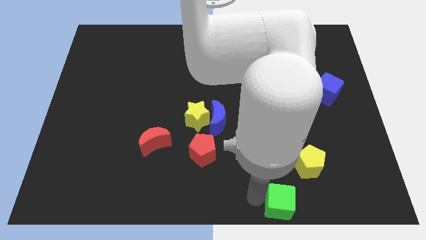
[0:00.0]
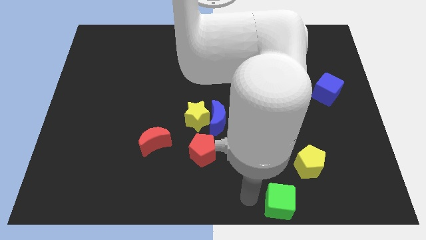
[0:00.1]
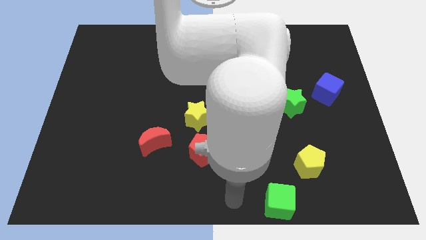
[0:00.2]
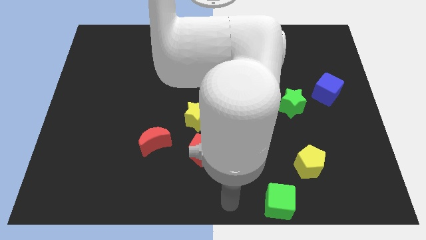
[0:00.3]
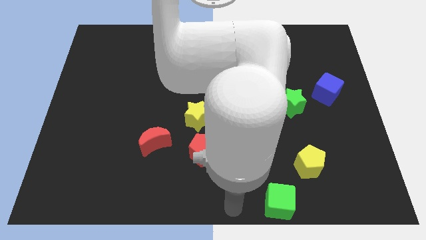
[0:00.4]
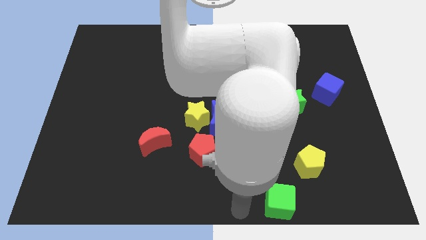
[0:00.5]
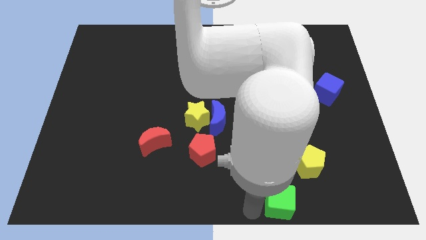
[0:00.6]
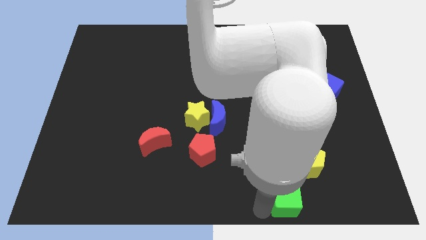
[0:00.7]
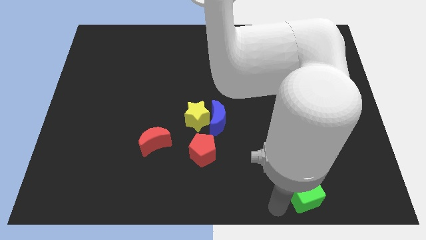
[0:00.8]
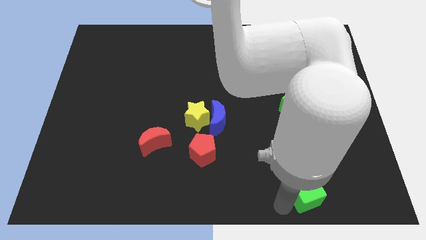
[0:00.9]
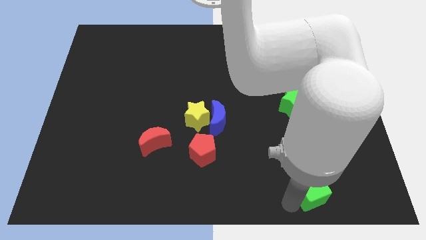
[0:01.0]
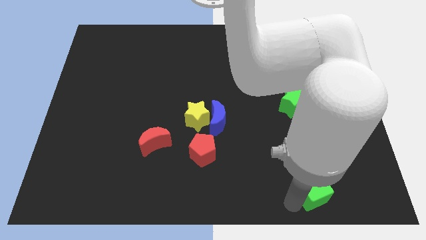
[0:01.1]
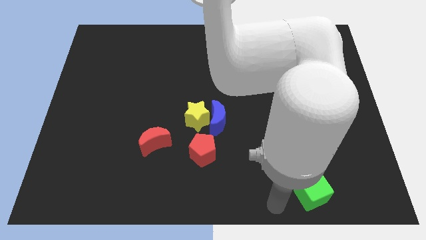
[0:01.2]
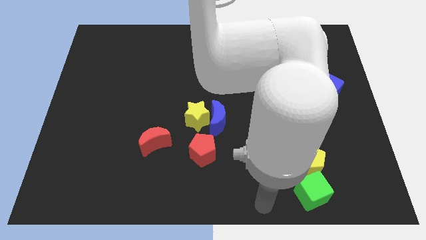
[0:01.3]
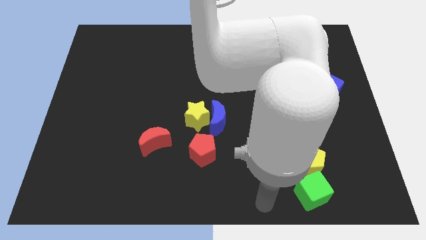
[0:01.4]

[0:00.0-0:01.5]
place the green cube below the yellow pentagon

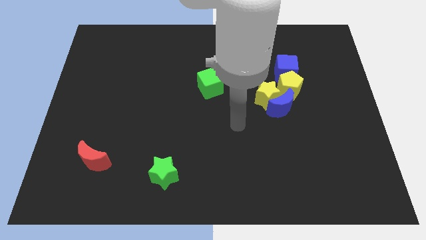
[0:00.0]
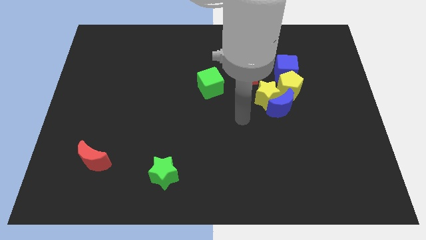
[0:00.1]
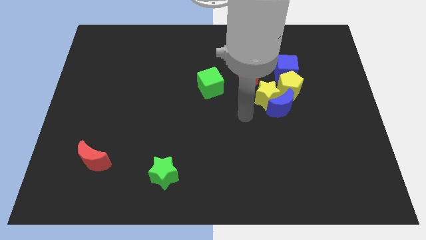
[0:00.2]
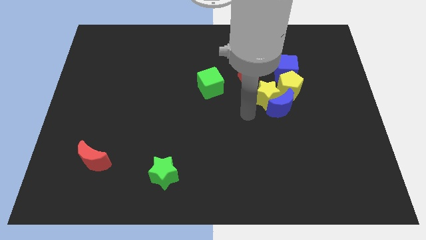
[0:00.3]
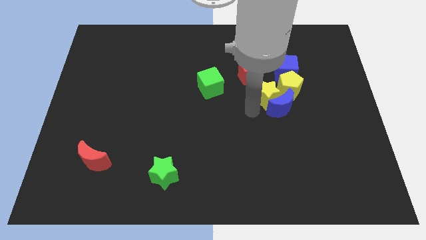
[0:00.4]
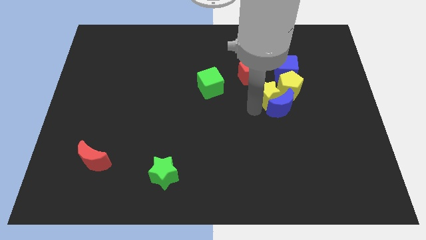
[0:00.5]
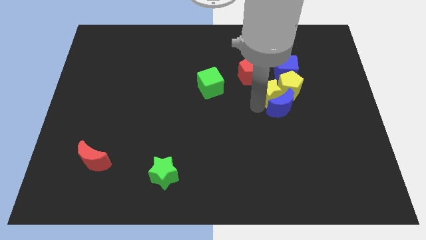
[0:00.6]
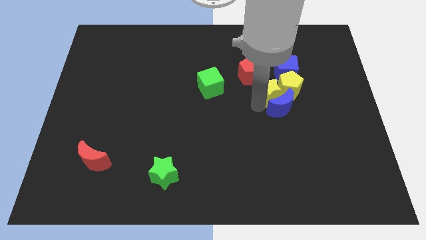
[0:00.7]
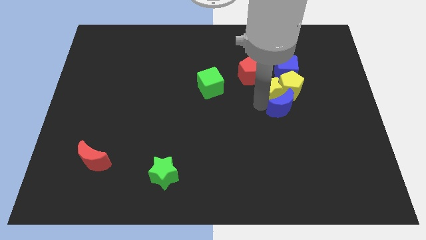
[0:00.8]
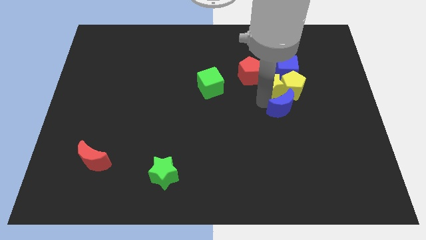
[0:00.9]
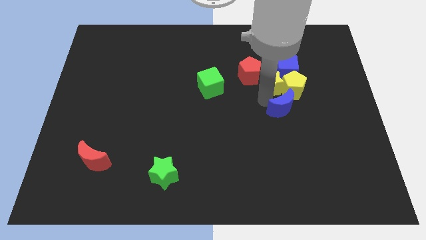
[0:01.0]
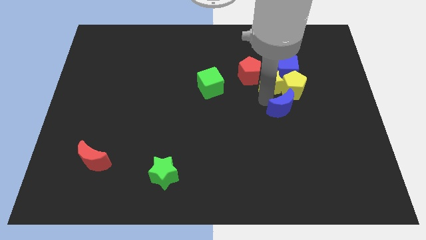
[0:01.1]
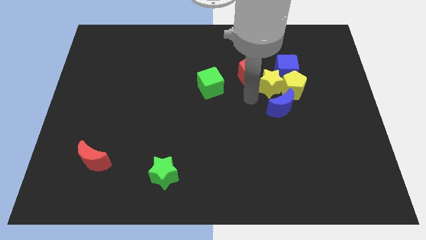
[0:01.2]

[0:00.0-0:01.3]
make the yellow star touch the bottom left of the blue cube

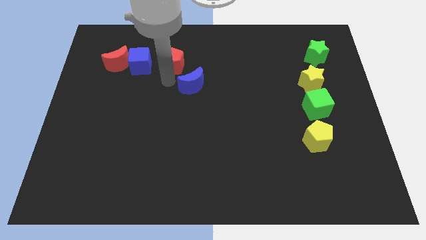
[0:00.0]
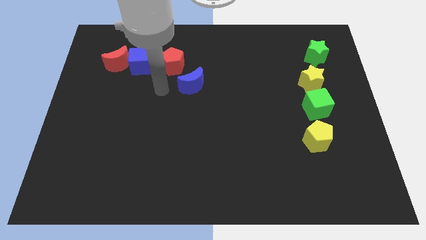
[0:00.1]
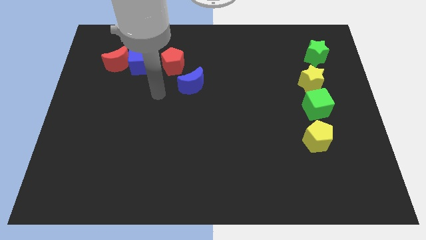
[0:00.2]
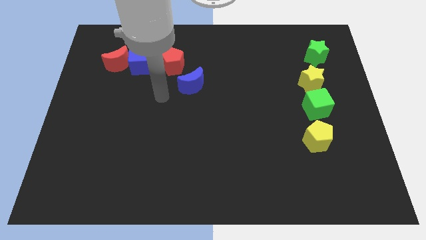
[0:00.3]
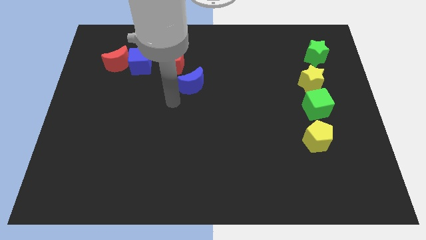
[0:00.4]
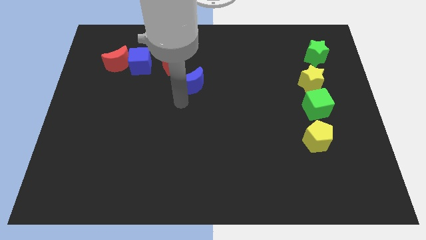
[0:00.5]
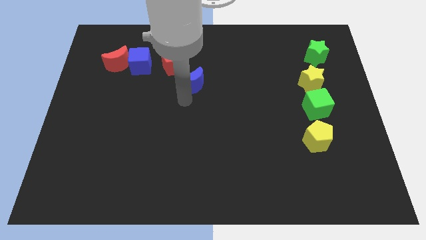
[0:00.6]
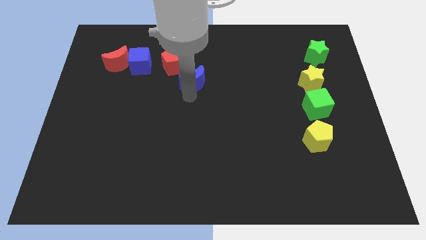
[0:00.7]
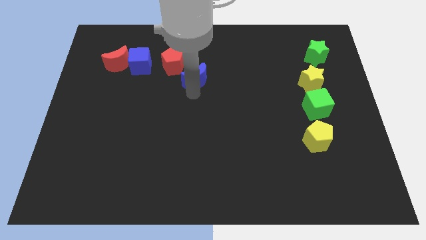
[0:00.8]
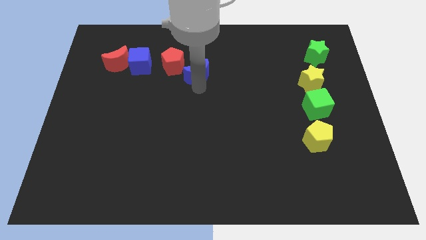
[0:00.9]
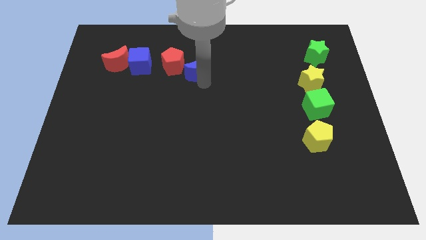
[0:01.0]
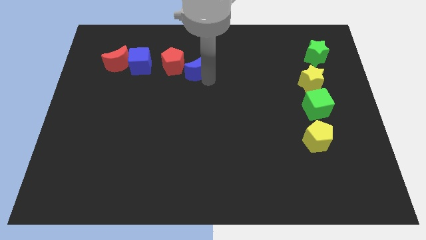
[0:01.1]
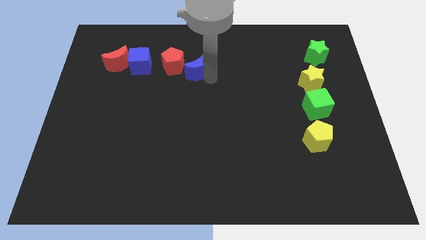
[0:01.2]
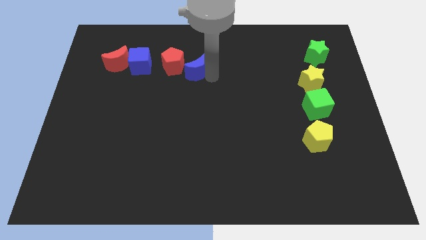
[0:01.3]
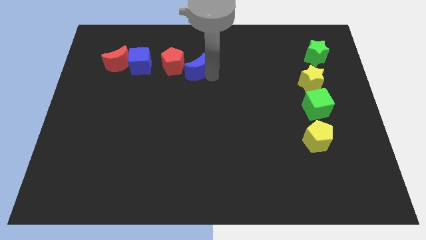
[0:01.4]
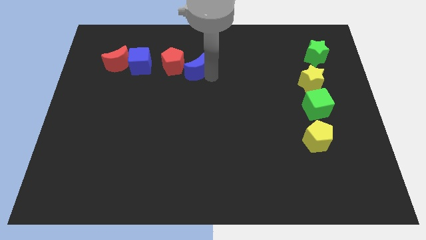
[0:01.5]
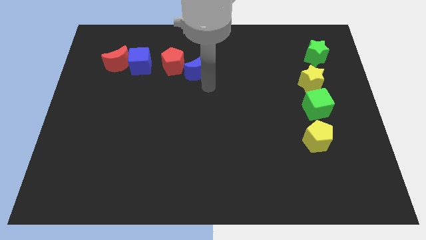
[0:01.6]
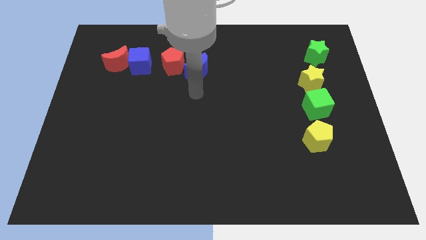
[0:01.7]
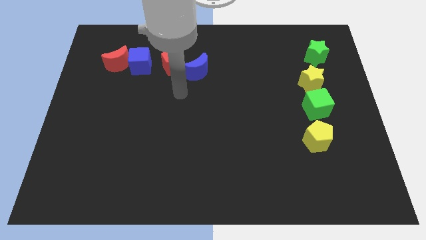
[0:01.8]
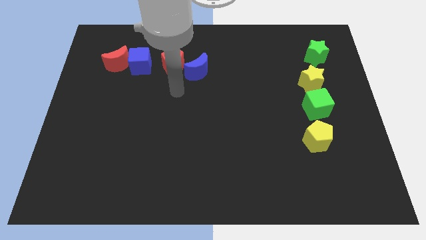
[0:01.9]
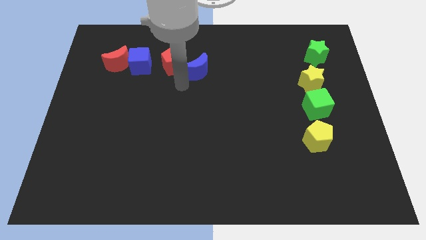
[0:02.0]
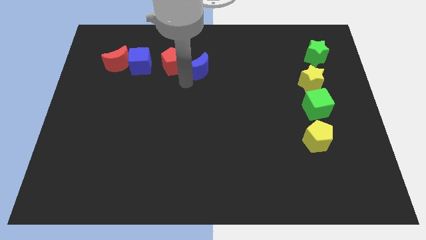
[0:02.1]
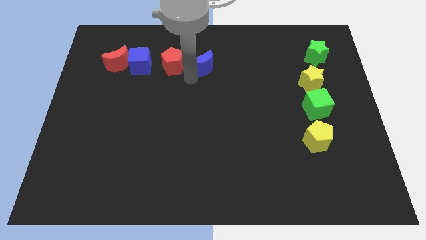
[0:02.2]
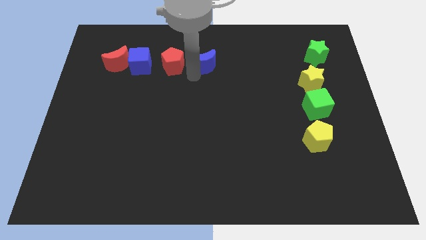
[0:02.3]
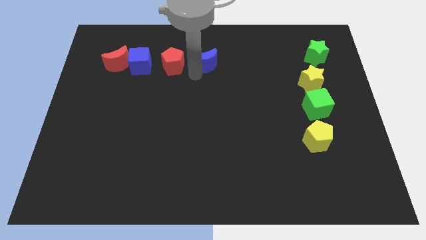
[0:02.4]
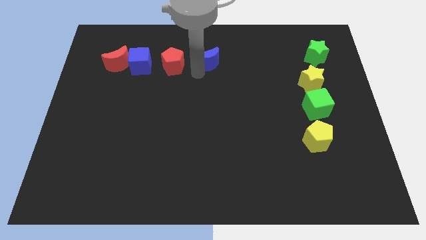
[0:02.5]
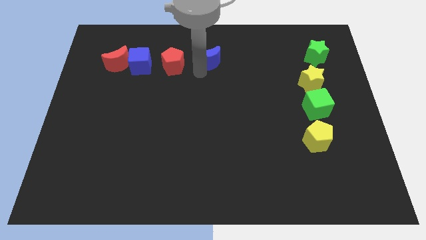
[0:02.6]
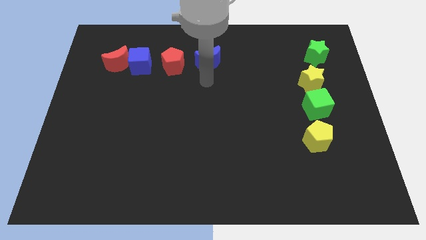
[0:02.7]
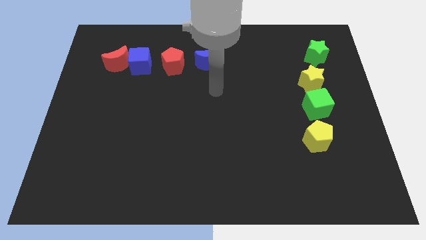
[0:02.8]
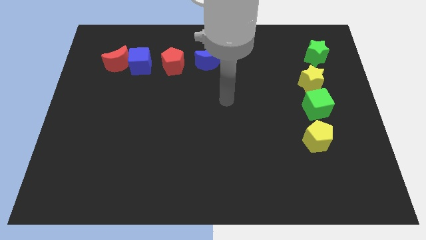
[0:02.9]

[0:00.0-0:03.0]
move the blue moon right to the red pentagon

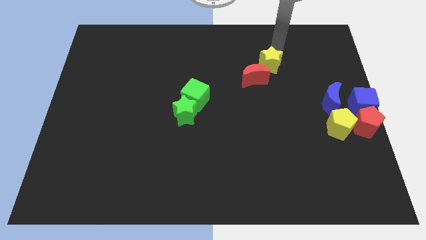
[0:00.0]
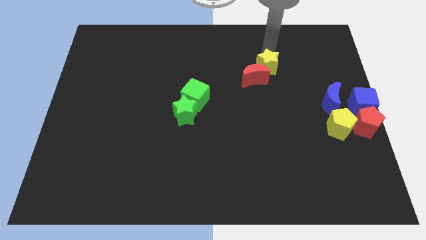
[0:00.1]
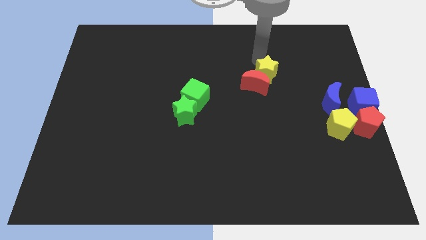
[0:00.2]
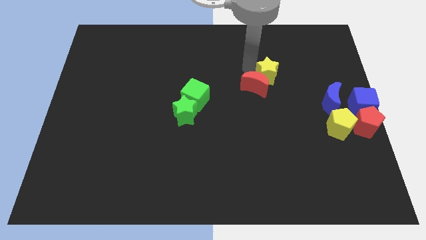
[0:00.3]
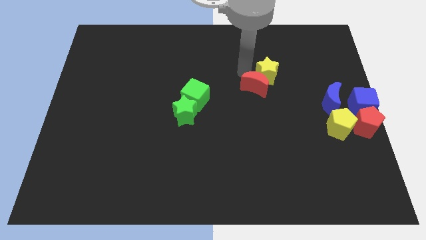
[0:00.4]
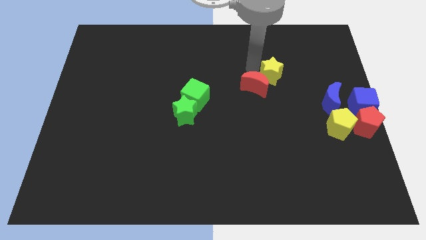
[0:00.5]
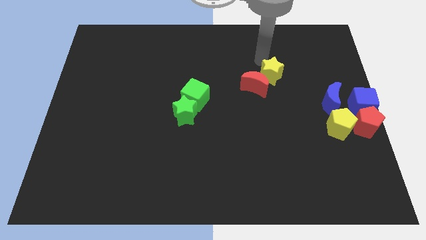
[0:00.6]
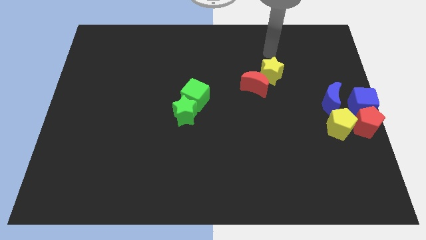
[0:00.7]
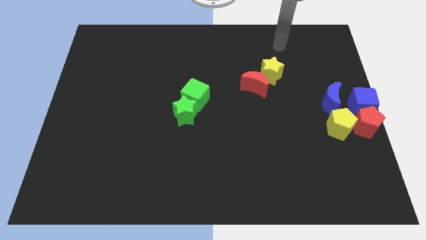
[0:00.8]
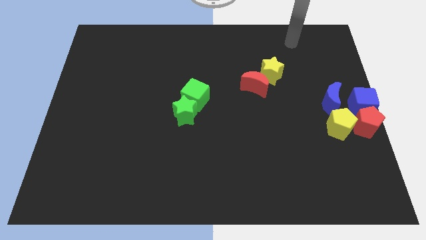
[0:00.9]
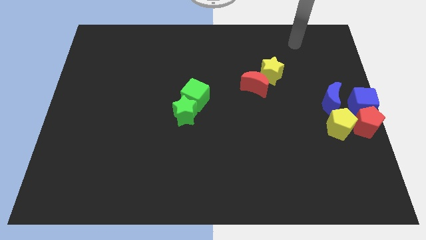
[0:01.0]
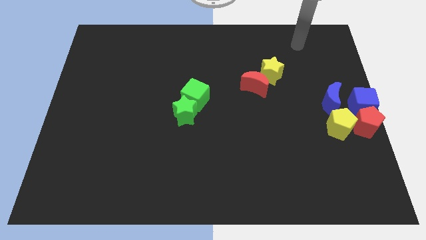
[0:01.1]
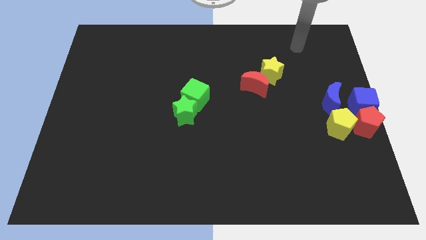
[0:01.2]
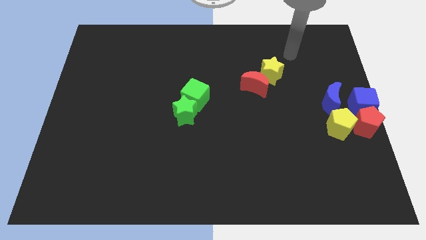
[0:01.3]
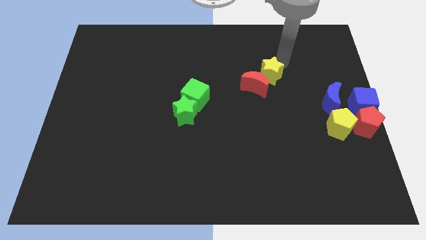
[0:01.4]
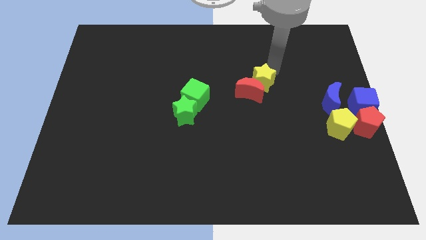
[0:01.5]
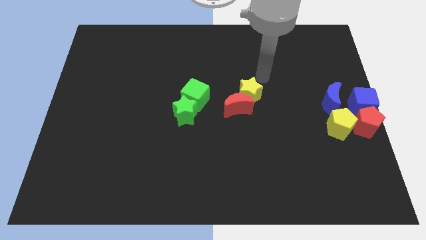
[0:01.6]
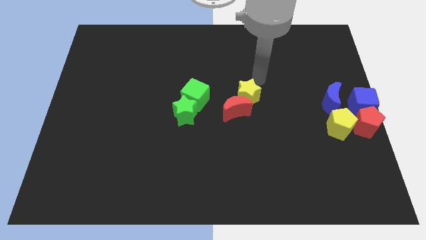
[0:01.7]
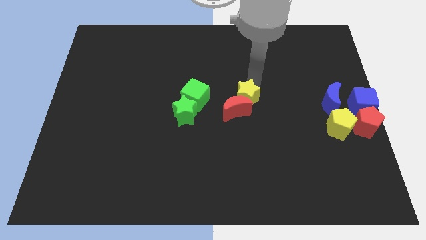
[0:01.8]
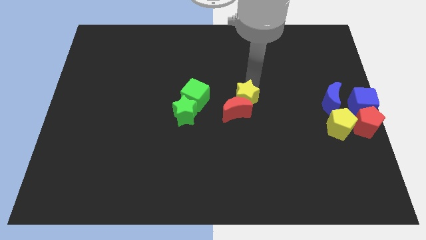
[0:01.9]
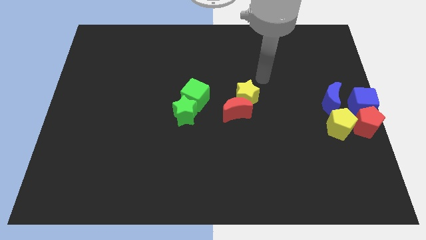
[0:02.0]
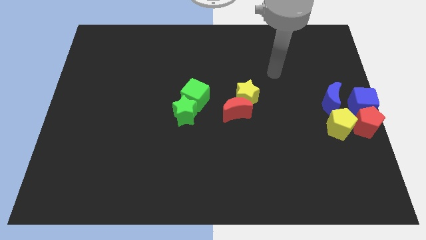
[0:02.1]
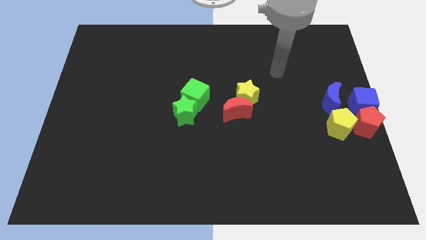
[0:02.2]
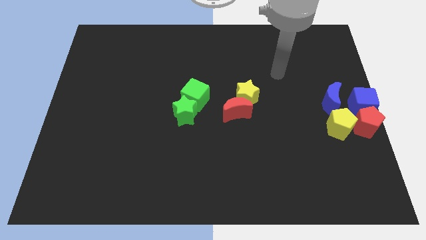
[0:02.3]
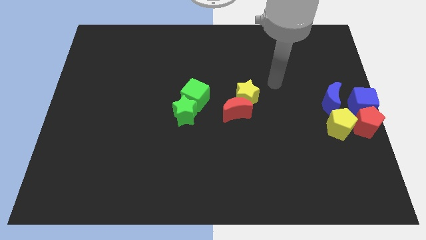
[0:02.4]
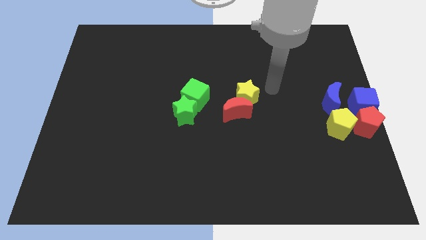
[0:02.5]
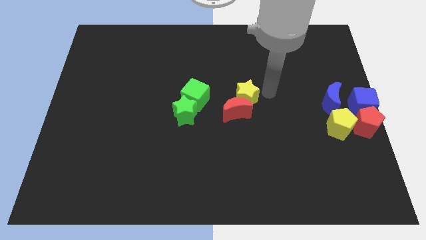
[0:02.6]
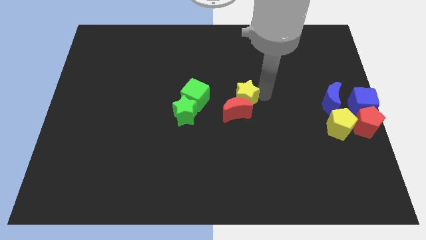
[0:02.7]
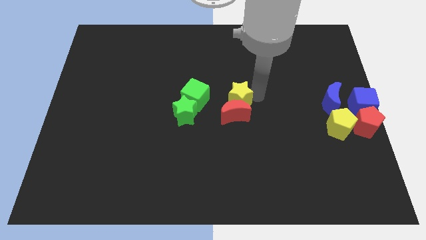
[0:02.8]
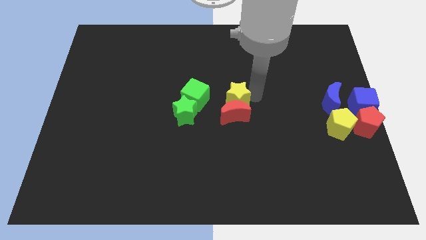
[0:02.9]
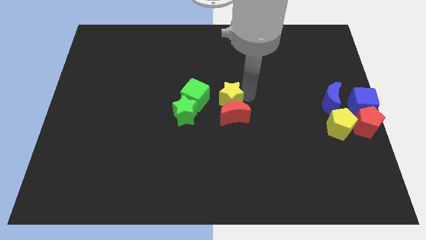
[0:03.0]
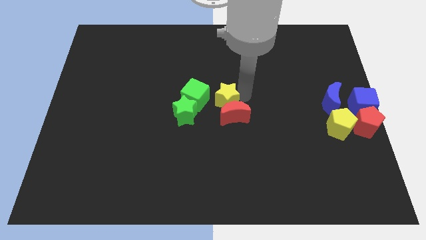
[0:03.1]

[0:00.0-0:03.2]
move the yellow star on the right side of the green cube horizontally
